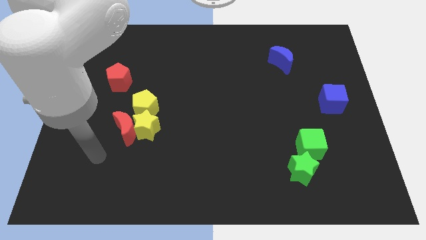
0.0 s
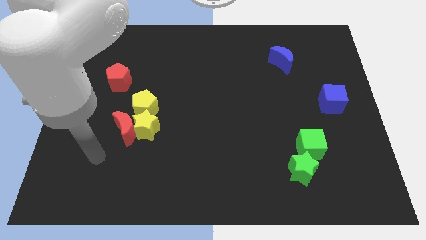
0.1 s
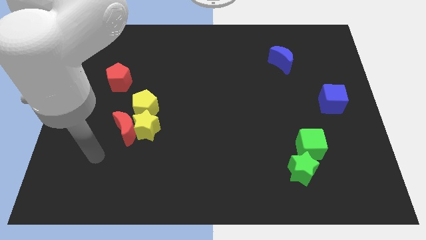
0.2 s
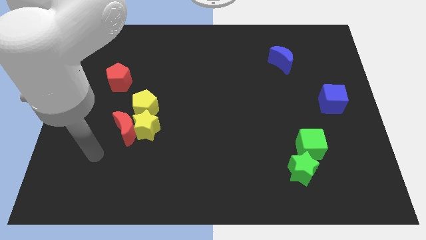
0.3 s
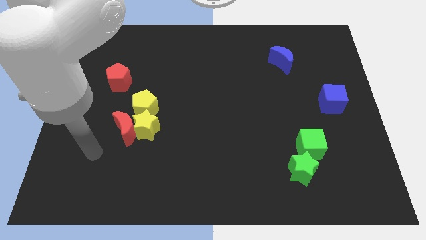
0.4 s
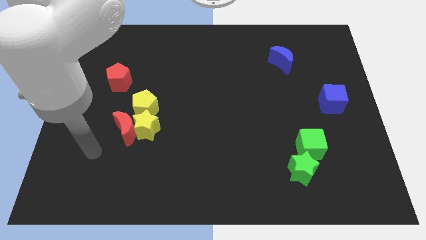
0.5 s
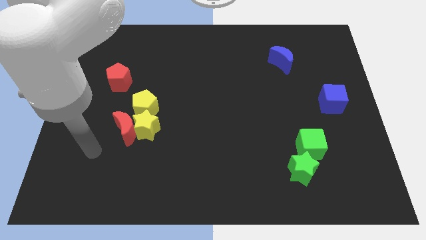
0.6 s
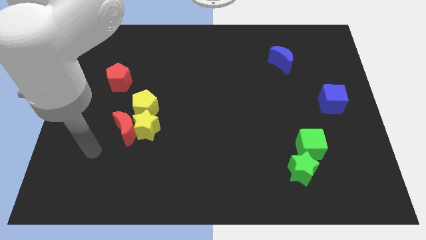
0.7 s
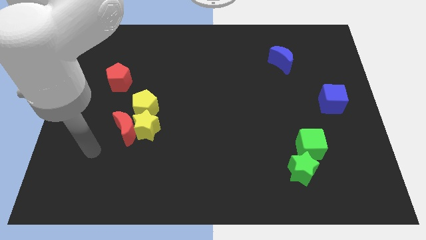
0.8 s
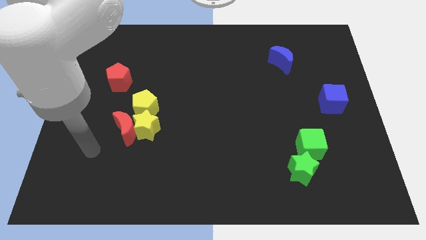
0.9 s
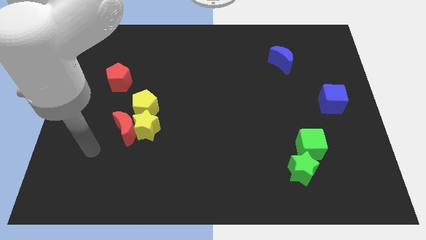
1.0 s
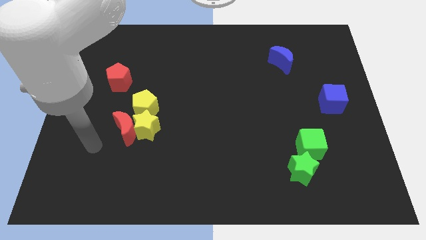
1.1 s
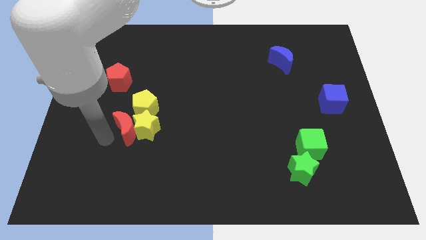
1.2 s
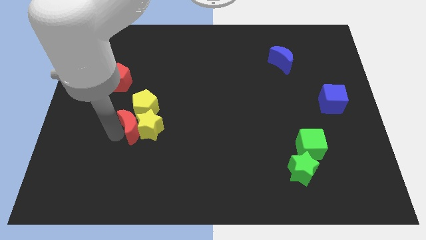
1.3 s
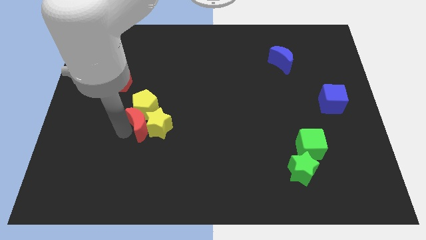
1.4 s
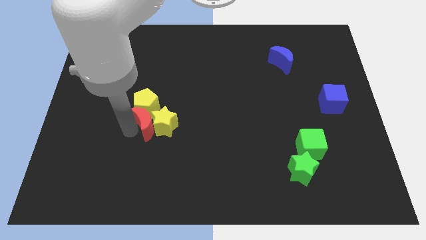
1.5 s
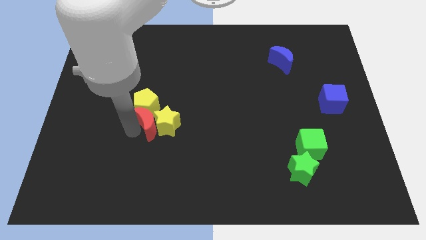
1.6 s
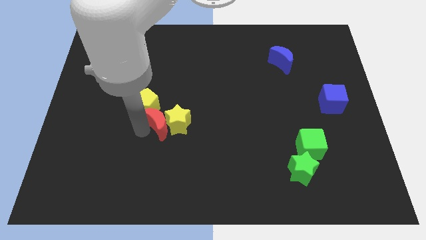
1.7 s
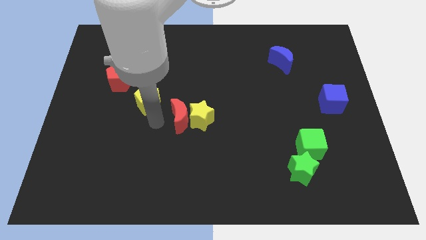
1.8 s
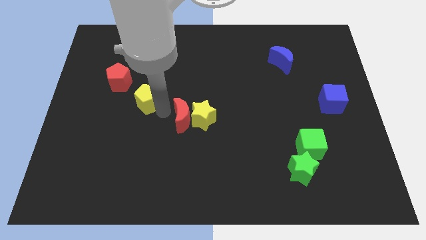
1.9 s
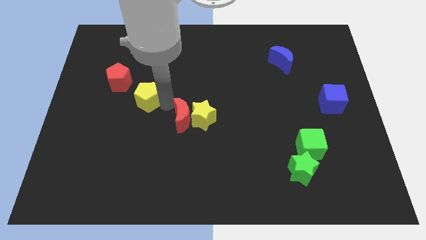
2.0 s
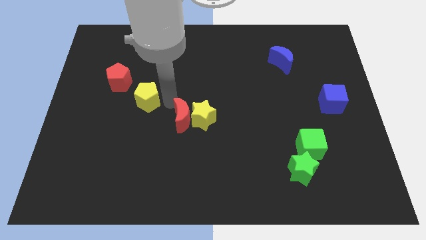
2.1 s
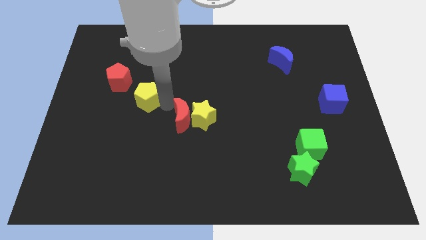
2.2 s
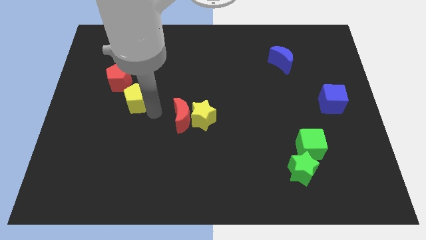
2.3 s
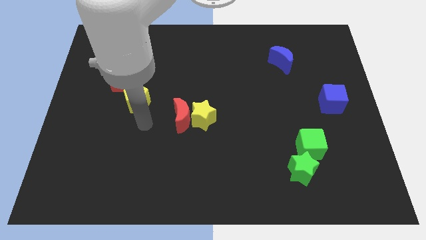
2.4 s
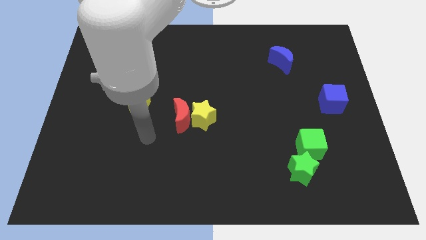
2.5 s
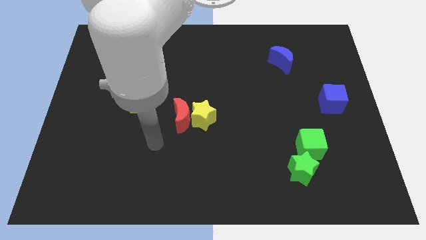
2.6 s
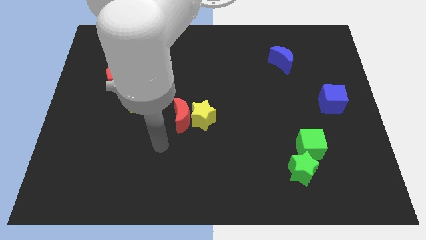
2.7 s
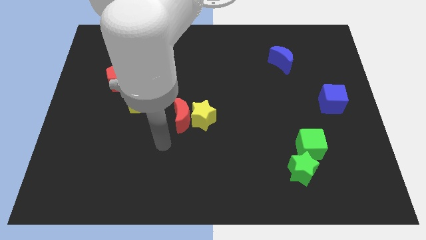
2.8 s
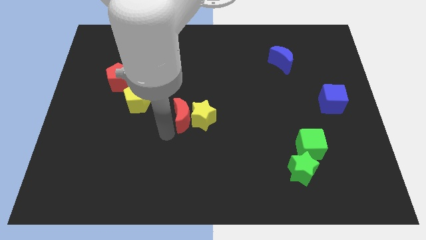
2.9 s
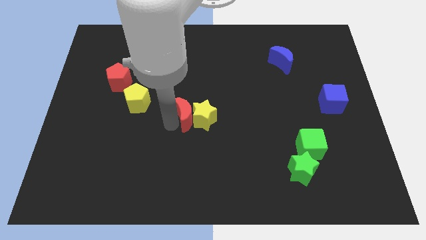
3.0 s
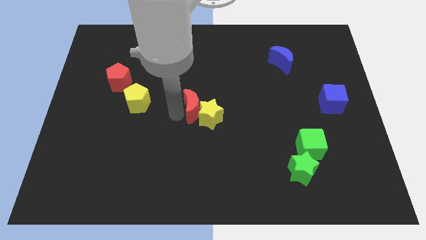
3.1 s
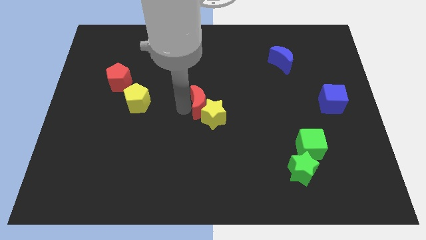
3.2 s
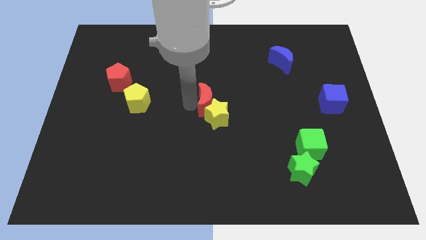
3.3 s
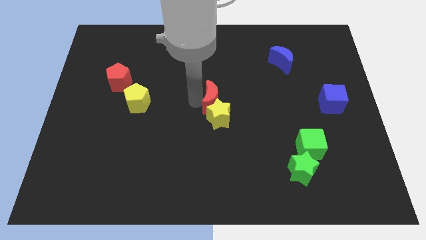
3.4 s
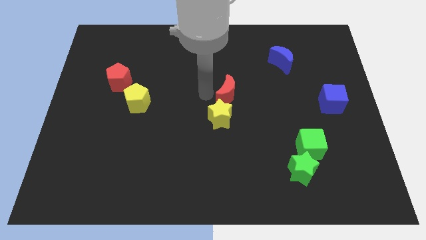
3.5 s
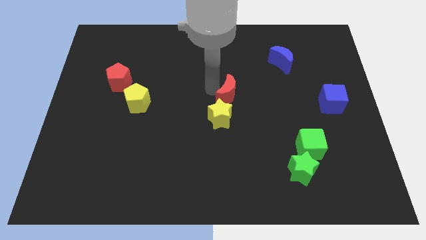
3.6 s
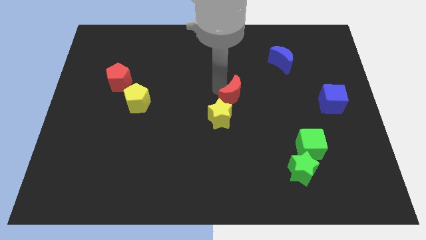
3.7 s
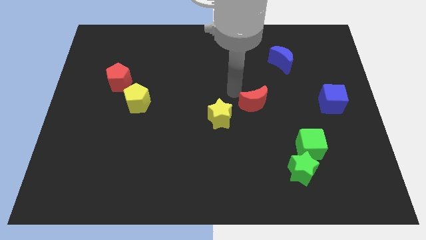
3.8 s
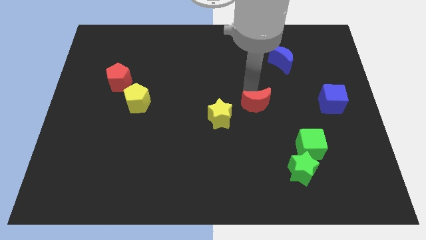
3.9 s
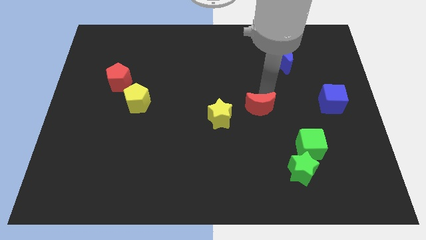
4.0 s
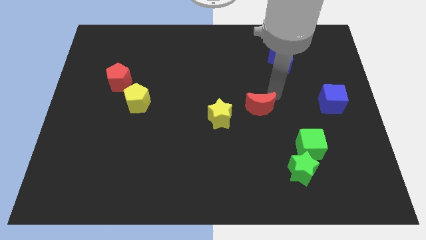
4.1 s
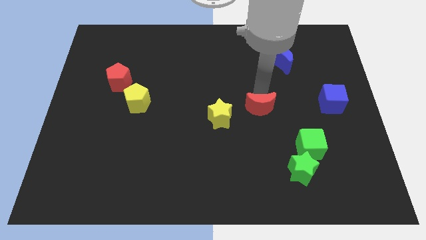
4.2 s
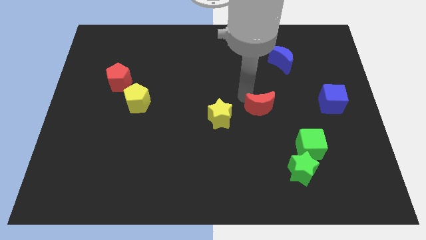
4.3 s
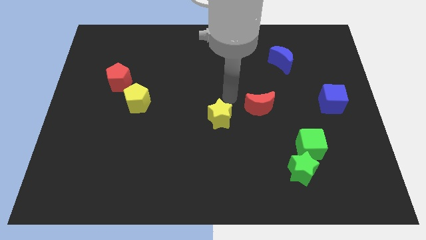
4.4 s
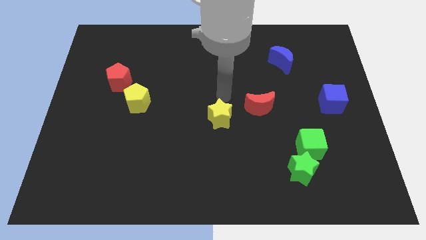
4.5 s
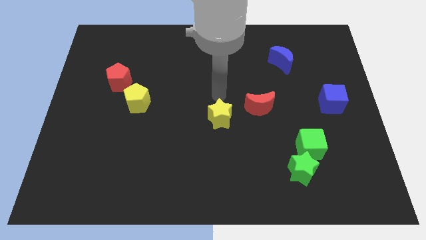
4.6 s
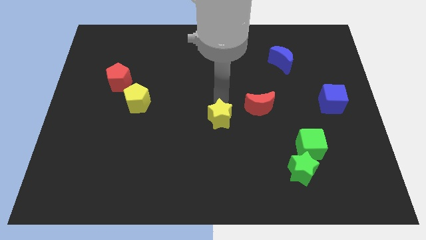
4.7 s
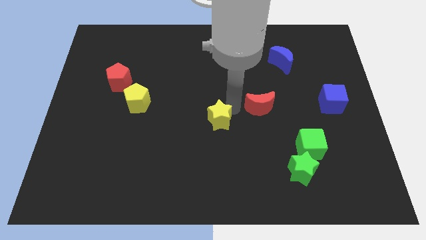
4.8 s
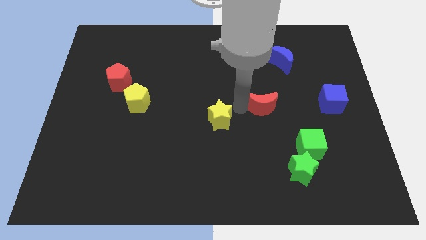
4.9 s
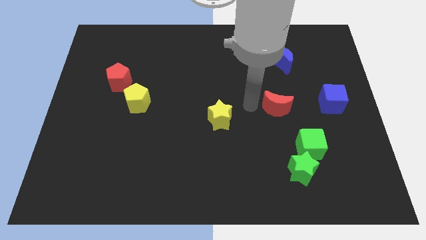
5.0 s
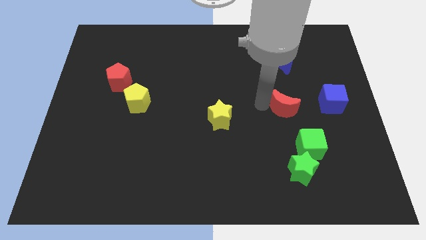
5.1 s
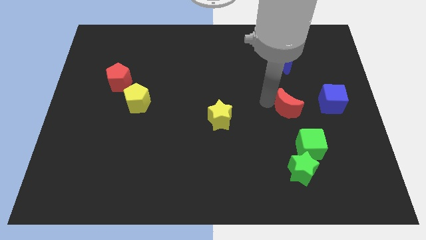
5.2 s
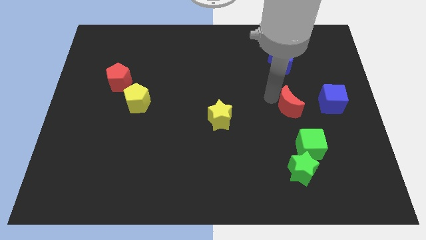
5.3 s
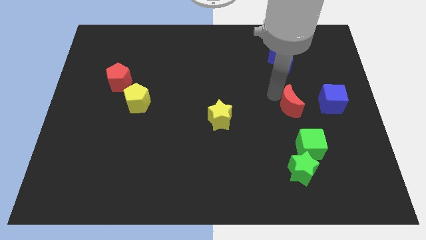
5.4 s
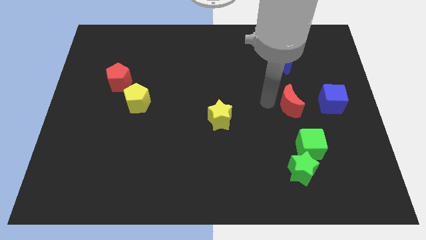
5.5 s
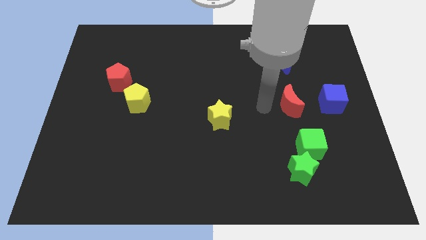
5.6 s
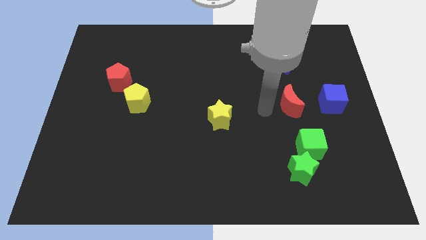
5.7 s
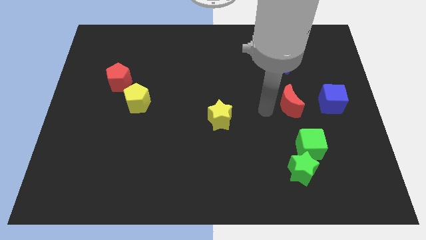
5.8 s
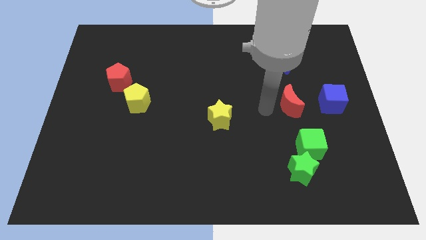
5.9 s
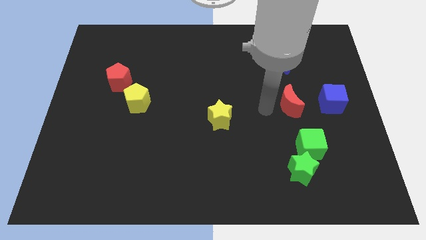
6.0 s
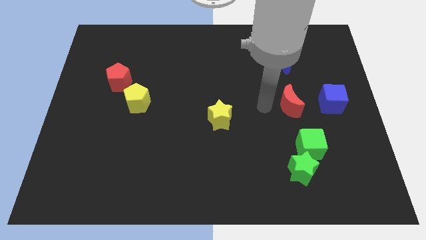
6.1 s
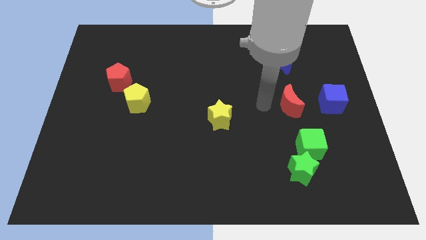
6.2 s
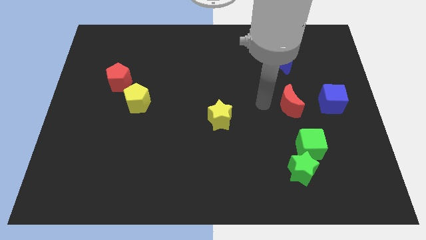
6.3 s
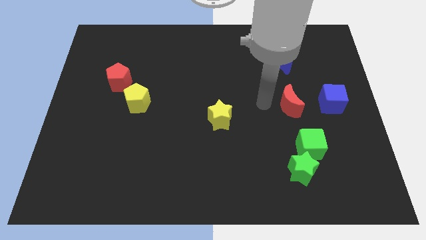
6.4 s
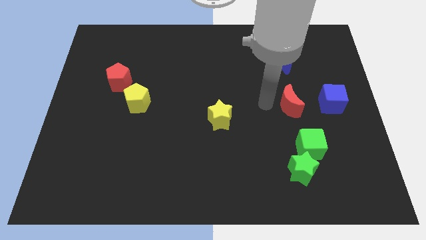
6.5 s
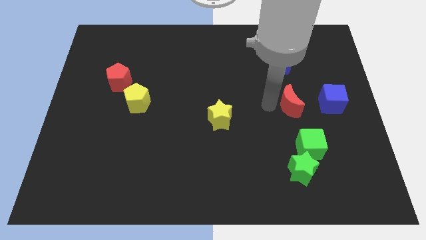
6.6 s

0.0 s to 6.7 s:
push the red crescent left to the blue cube

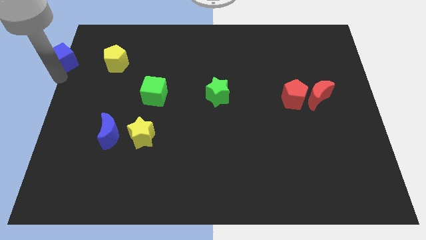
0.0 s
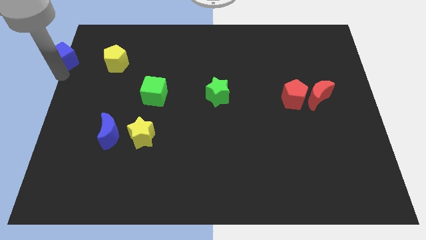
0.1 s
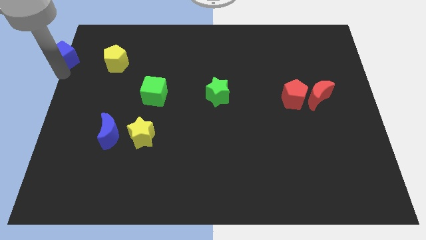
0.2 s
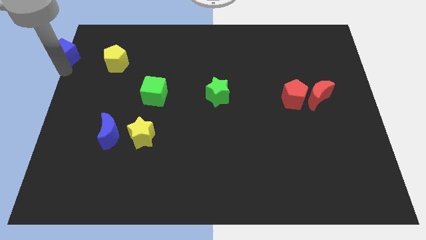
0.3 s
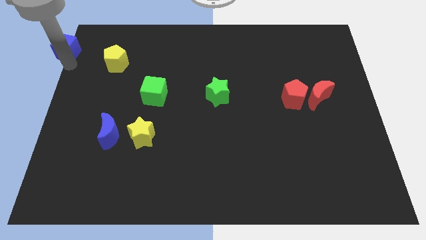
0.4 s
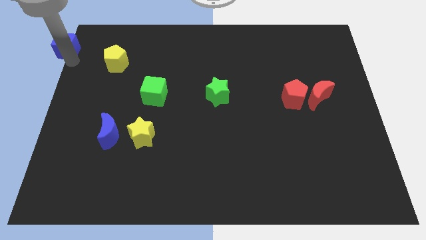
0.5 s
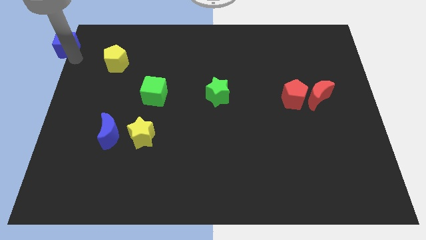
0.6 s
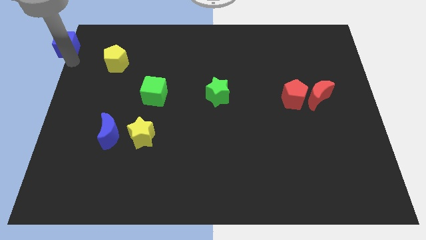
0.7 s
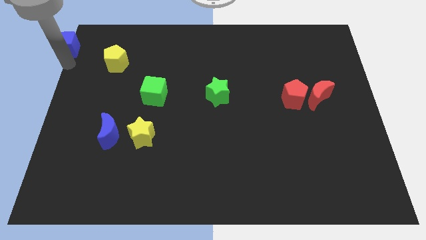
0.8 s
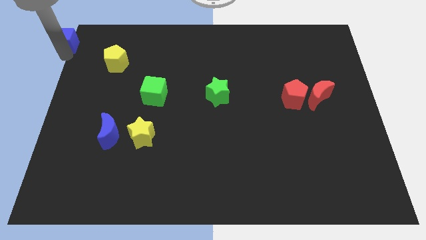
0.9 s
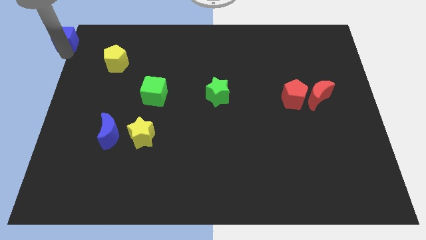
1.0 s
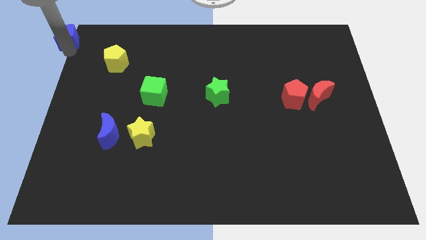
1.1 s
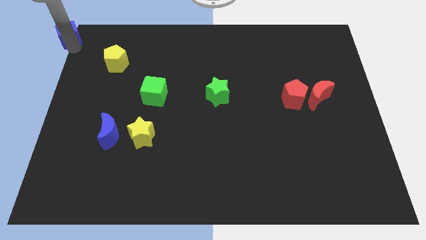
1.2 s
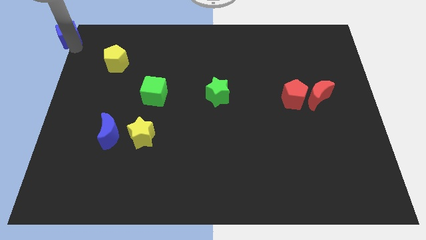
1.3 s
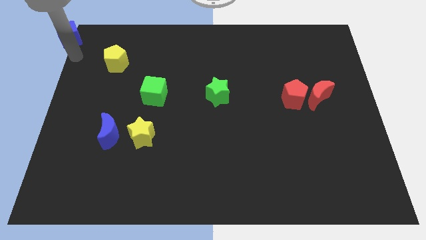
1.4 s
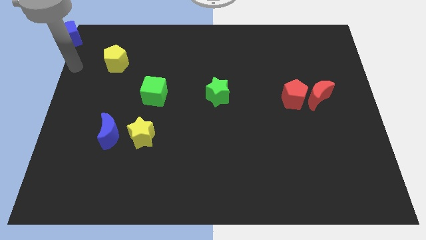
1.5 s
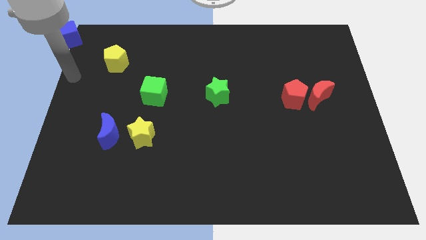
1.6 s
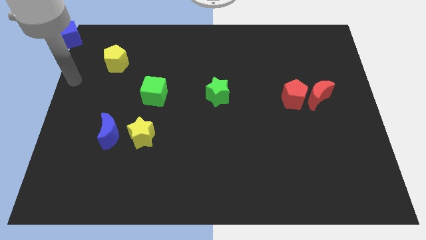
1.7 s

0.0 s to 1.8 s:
push the blue cube to the top left corner of the board

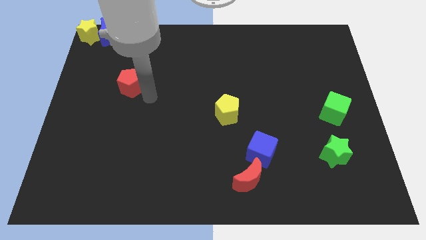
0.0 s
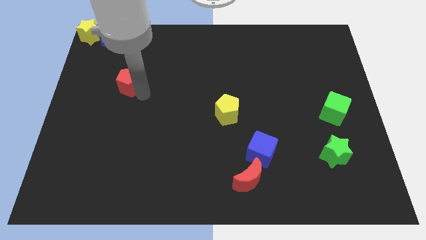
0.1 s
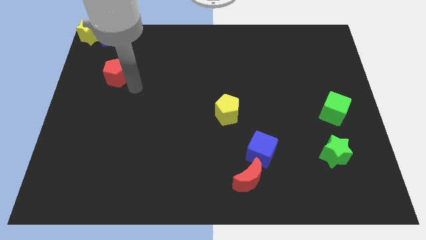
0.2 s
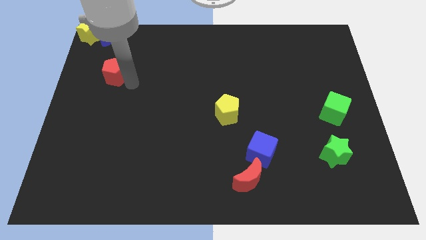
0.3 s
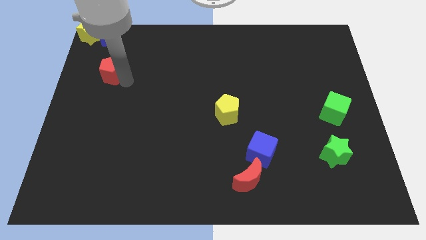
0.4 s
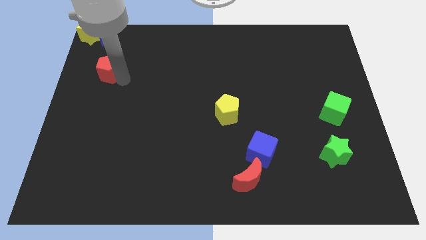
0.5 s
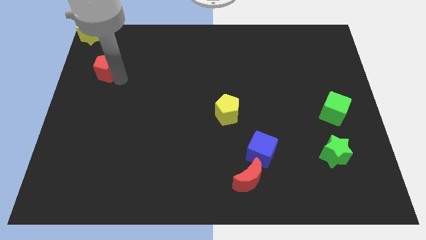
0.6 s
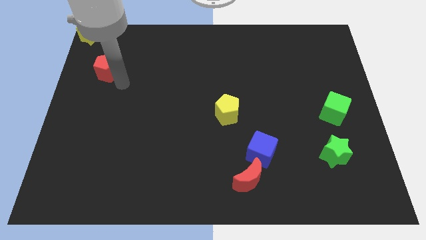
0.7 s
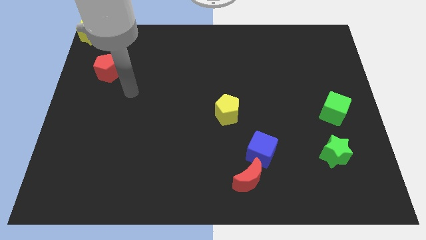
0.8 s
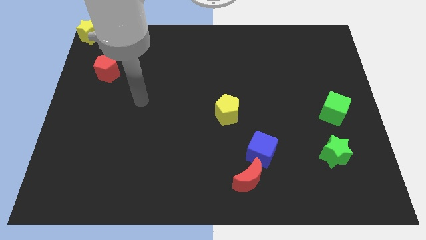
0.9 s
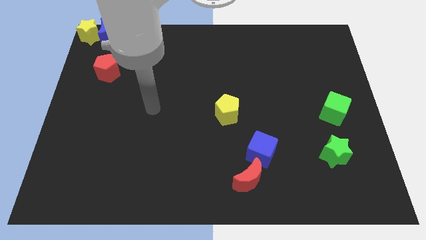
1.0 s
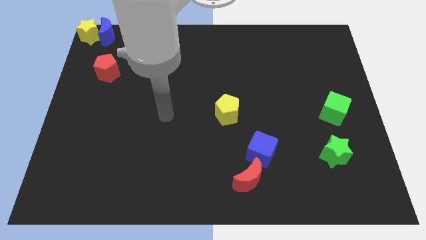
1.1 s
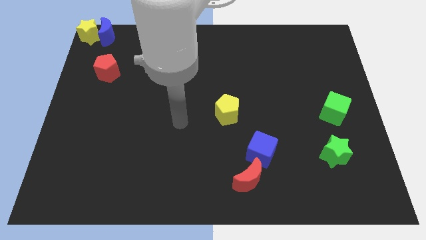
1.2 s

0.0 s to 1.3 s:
move the red pentagon below the blue moon
